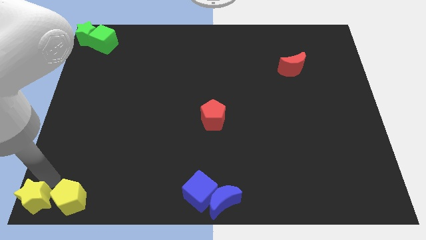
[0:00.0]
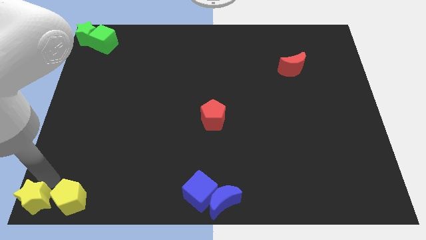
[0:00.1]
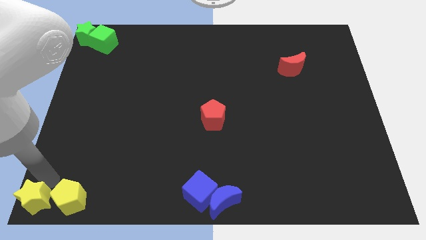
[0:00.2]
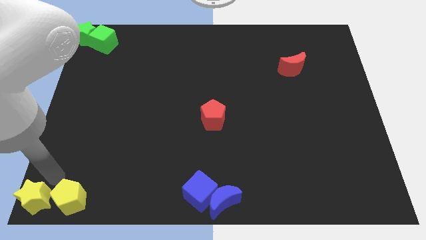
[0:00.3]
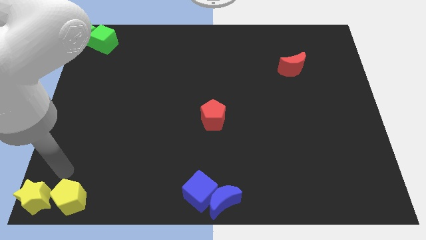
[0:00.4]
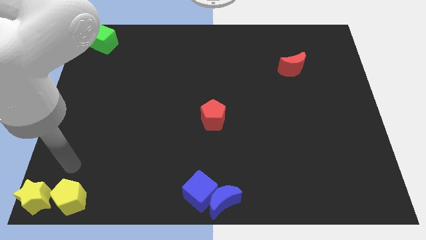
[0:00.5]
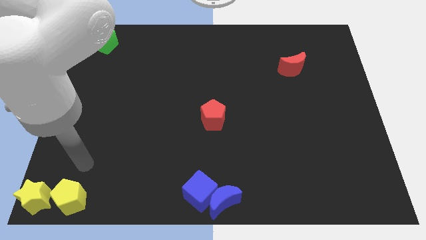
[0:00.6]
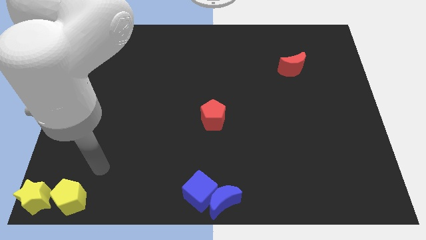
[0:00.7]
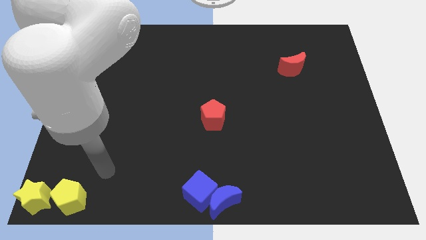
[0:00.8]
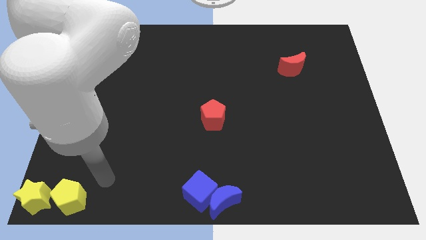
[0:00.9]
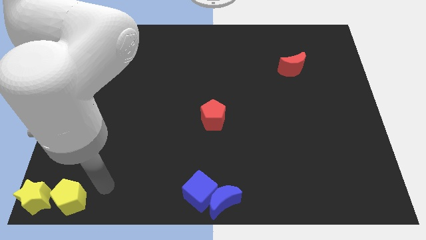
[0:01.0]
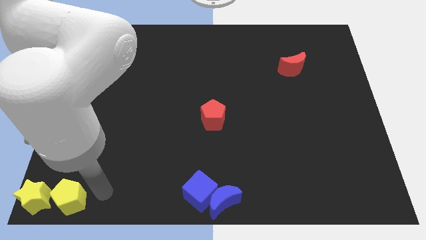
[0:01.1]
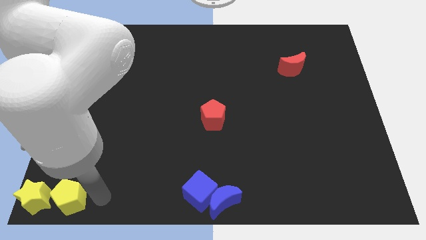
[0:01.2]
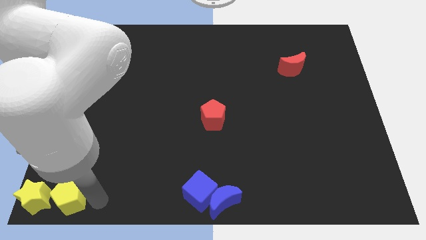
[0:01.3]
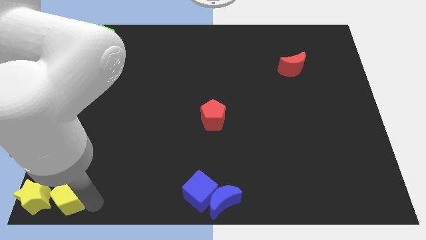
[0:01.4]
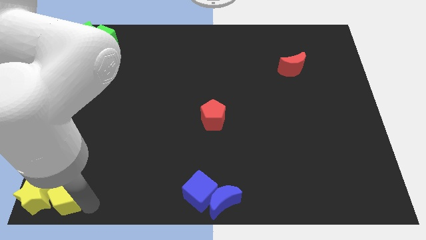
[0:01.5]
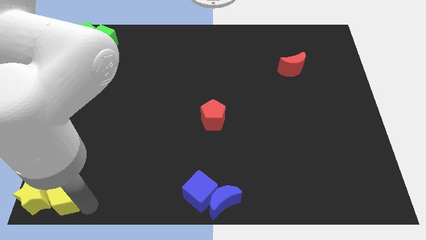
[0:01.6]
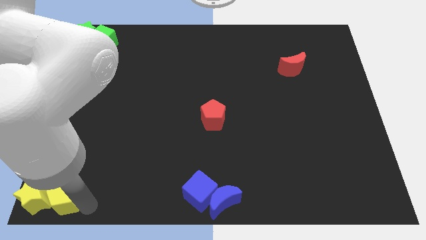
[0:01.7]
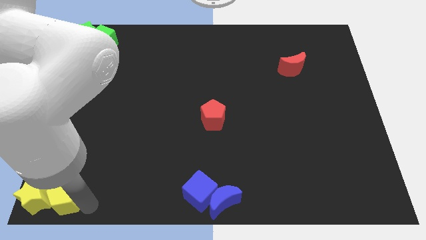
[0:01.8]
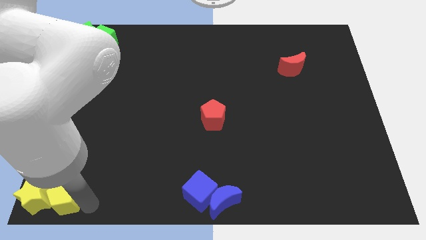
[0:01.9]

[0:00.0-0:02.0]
place yellow blocks towards bottom left corner

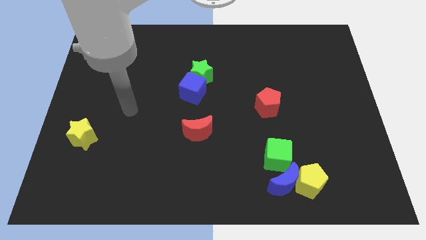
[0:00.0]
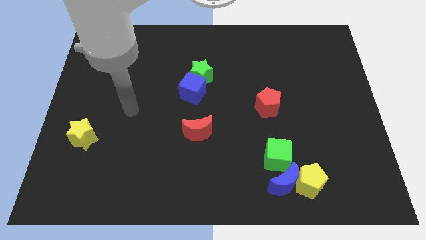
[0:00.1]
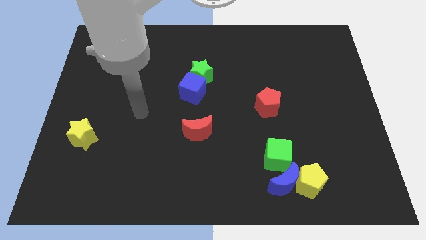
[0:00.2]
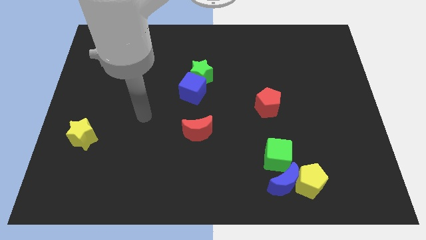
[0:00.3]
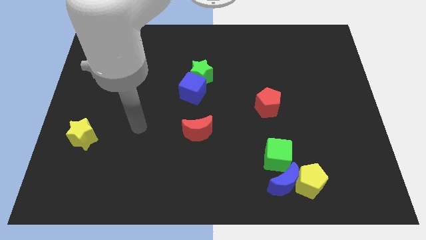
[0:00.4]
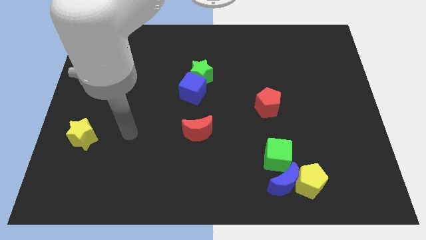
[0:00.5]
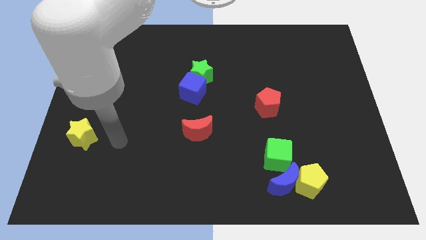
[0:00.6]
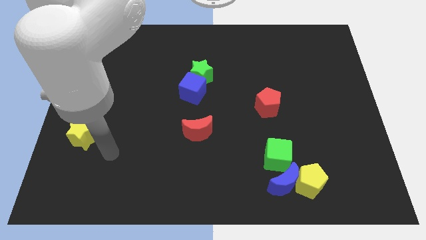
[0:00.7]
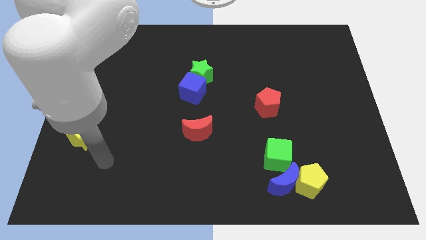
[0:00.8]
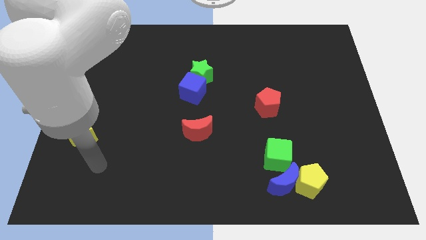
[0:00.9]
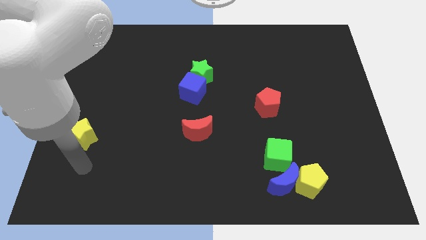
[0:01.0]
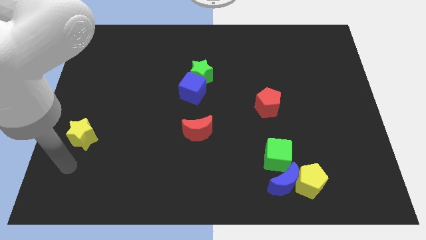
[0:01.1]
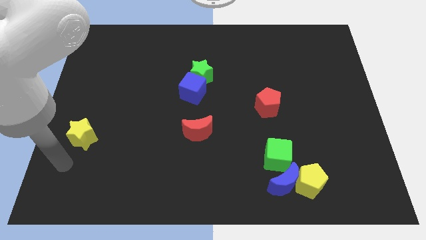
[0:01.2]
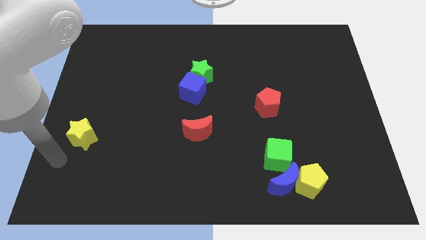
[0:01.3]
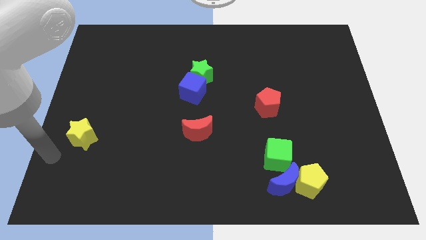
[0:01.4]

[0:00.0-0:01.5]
move the arm below to the yellow star

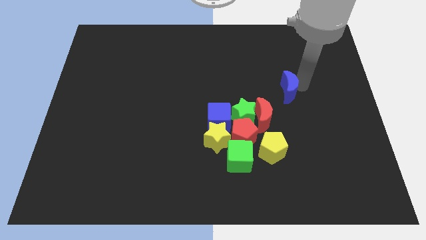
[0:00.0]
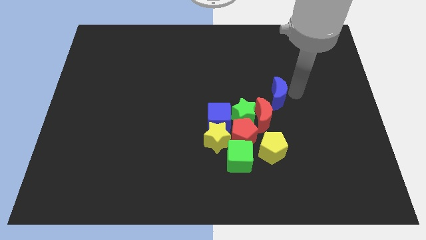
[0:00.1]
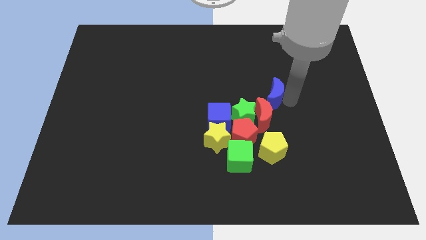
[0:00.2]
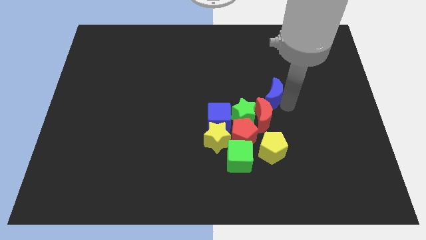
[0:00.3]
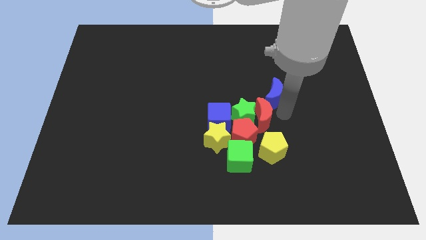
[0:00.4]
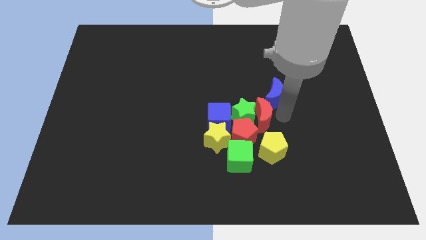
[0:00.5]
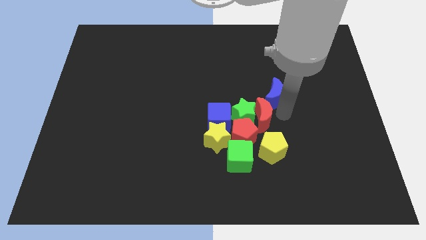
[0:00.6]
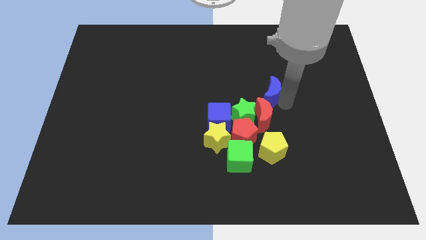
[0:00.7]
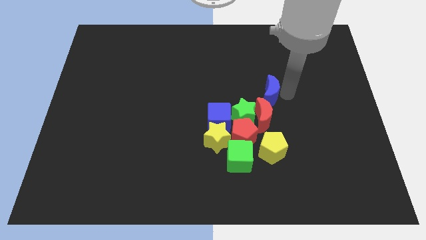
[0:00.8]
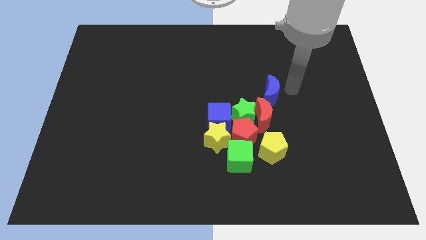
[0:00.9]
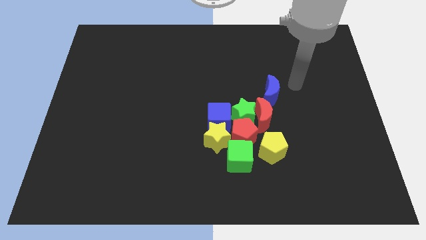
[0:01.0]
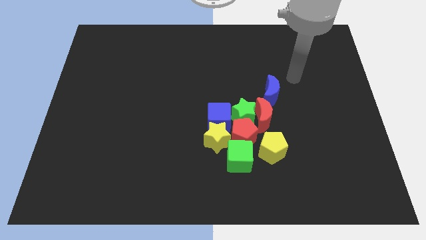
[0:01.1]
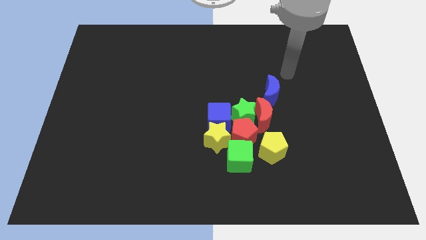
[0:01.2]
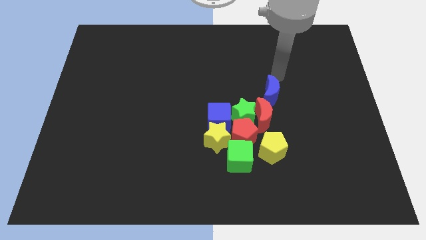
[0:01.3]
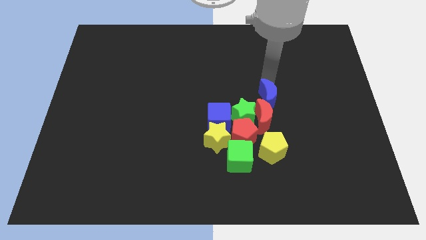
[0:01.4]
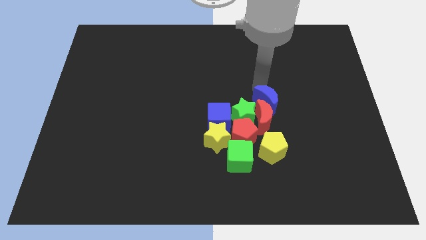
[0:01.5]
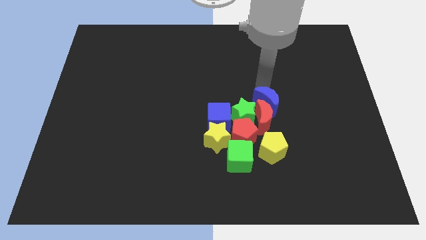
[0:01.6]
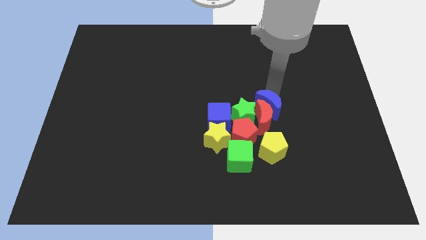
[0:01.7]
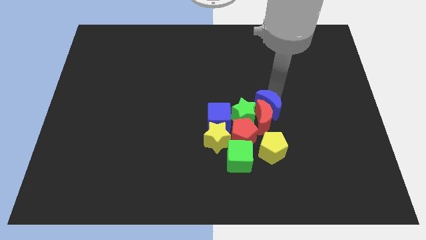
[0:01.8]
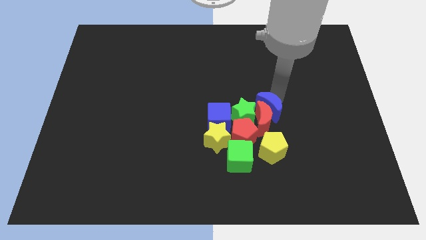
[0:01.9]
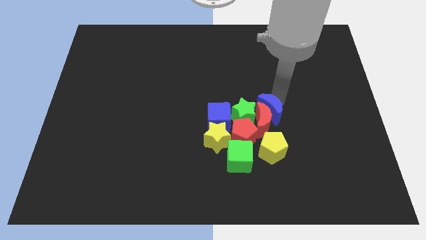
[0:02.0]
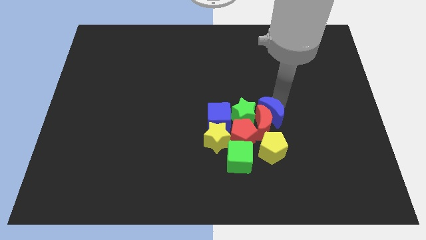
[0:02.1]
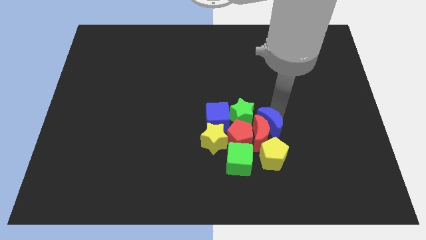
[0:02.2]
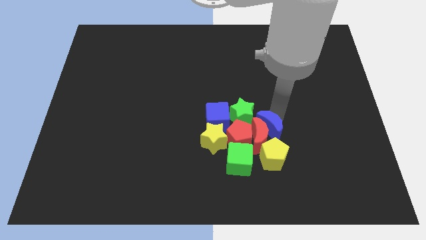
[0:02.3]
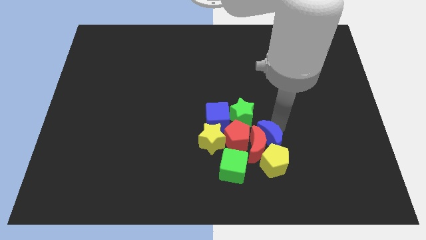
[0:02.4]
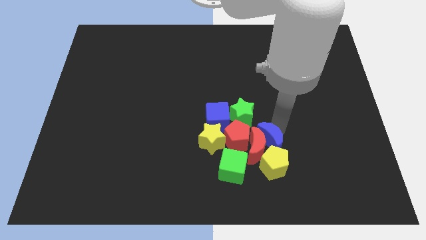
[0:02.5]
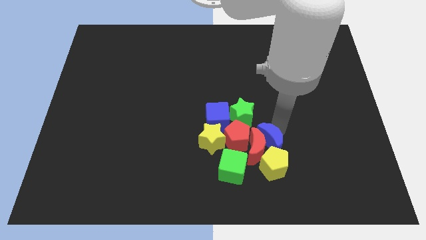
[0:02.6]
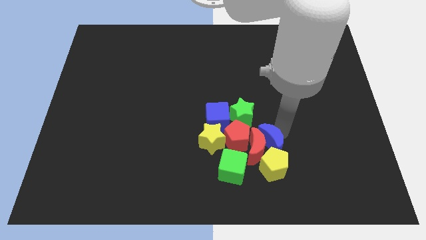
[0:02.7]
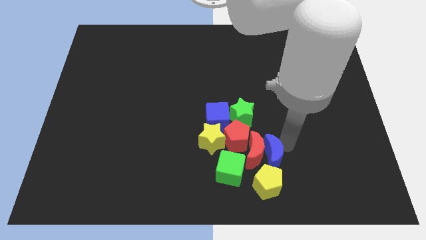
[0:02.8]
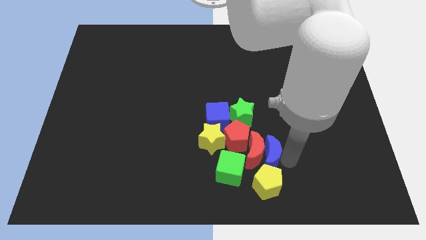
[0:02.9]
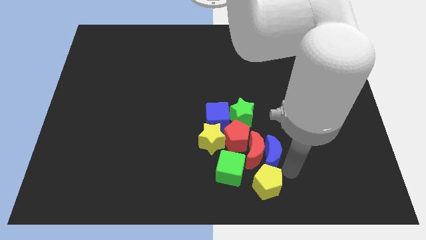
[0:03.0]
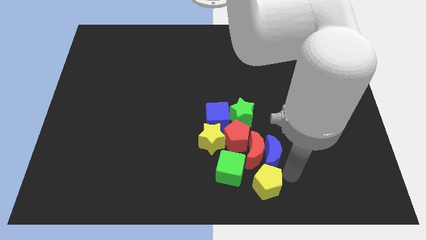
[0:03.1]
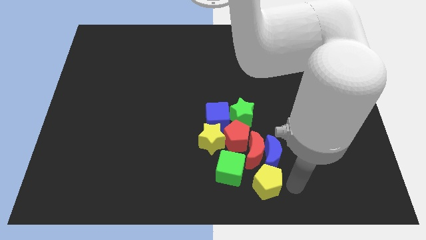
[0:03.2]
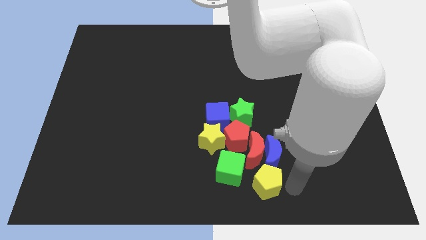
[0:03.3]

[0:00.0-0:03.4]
push blue moon into the red moon

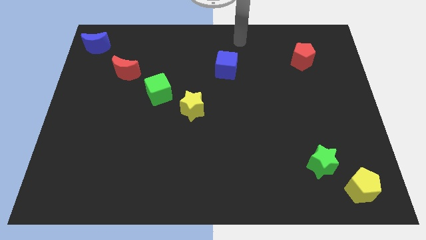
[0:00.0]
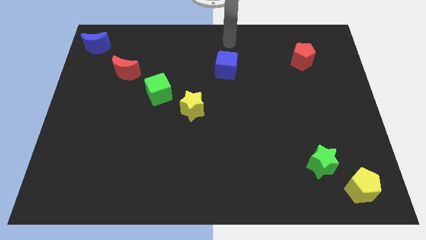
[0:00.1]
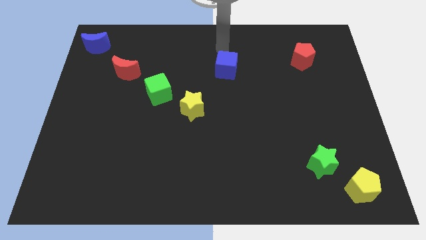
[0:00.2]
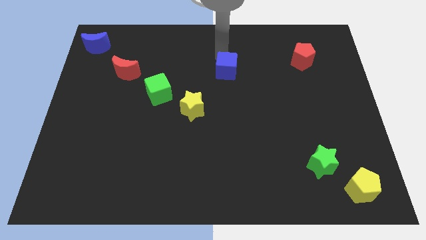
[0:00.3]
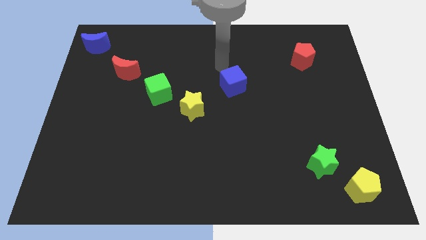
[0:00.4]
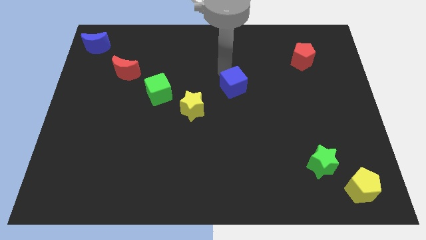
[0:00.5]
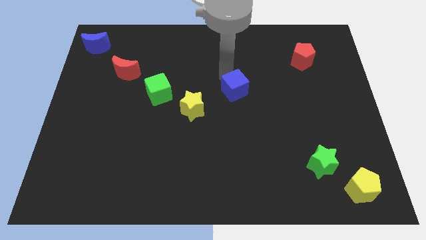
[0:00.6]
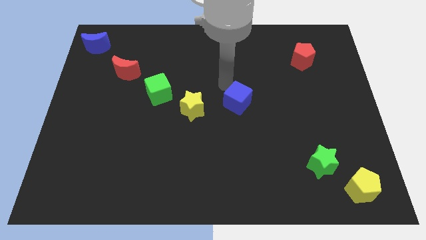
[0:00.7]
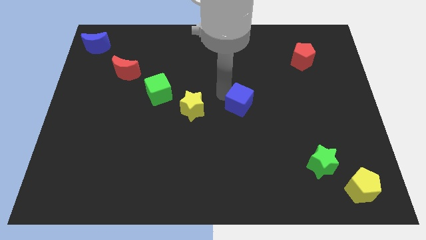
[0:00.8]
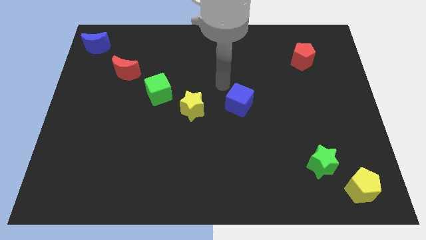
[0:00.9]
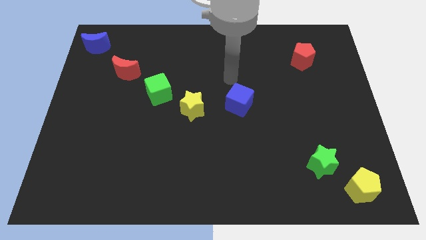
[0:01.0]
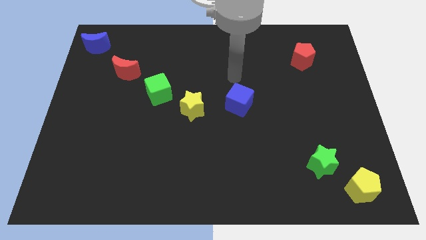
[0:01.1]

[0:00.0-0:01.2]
move the blue cube slightly towards down

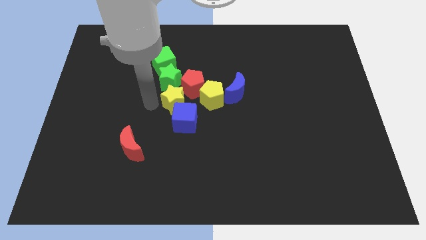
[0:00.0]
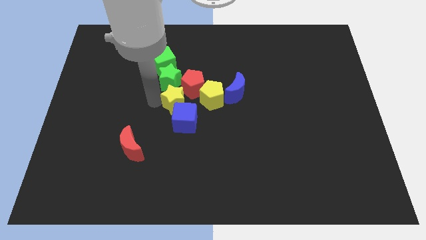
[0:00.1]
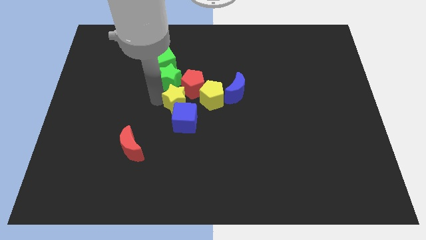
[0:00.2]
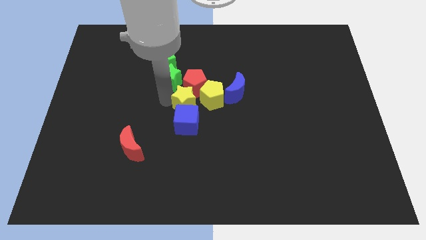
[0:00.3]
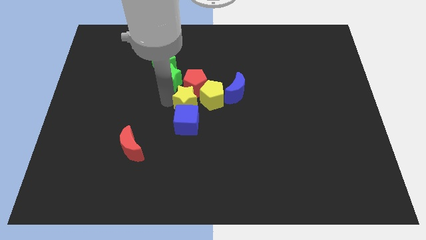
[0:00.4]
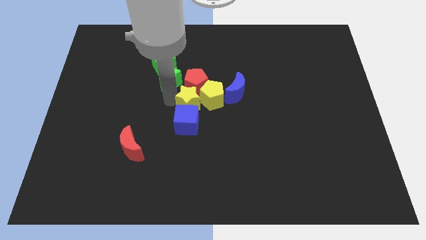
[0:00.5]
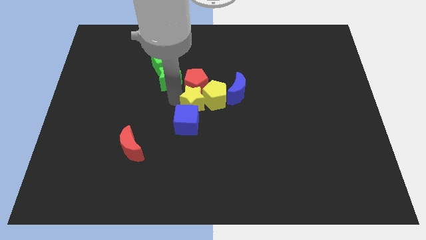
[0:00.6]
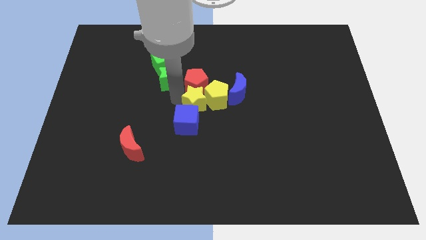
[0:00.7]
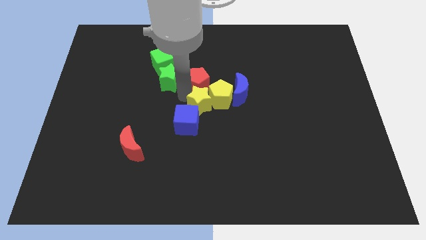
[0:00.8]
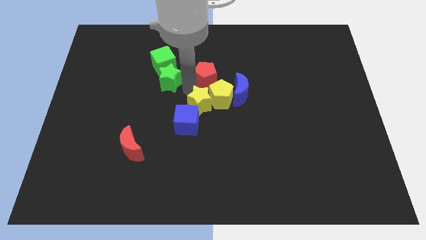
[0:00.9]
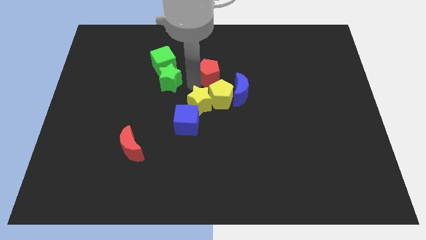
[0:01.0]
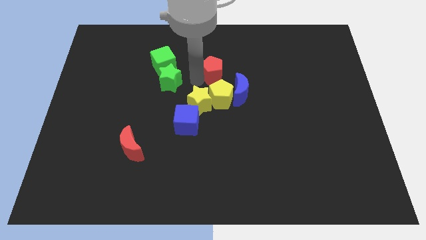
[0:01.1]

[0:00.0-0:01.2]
push the yellow star into the yellow pentagon
